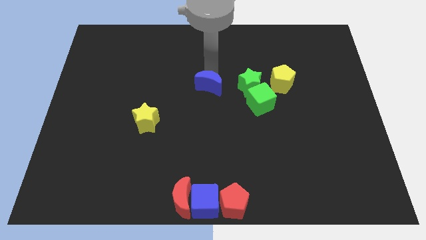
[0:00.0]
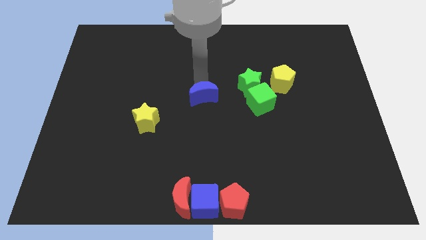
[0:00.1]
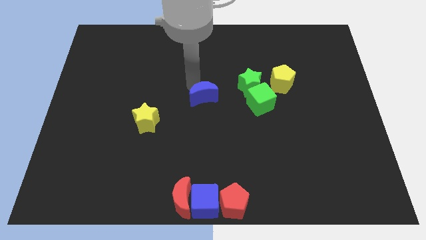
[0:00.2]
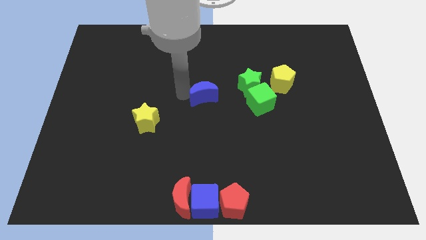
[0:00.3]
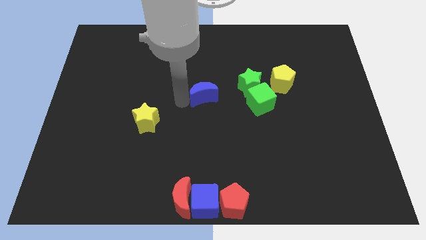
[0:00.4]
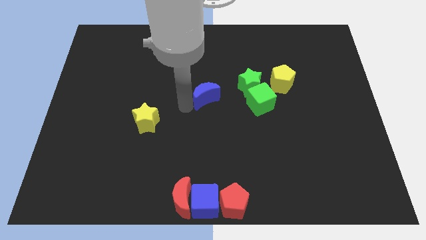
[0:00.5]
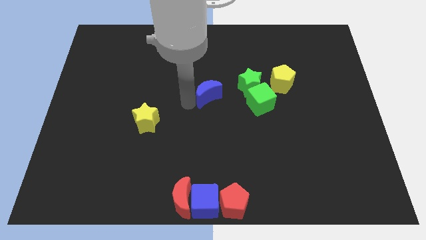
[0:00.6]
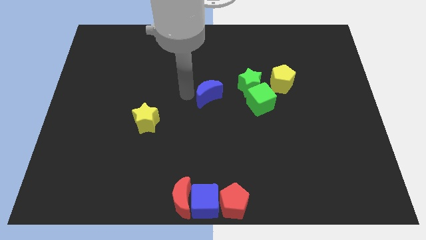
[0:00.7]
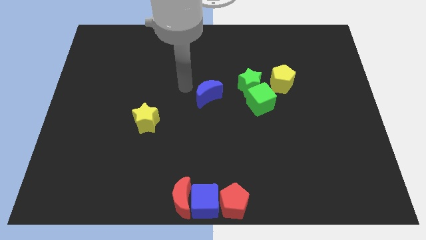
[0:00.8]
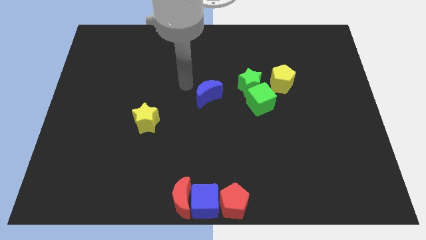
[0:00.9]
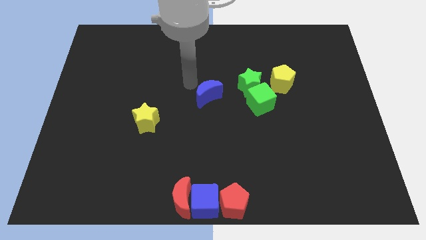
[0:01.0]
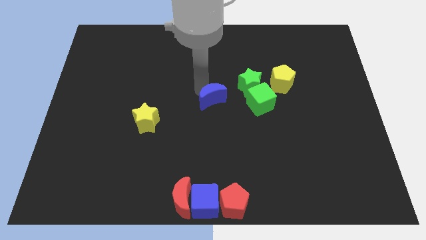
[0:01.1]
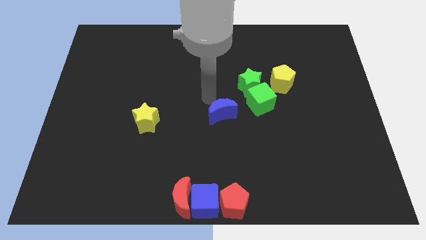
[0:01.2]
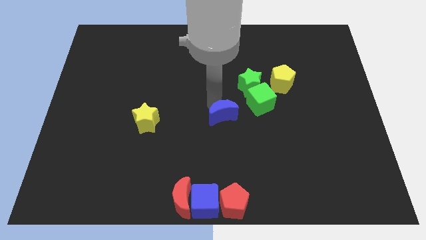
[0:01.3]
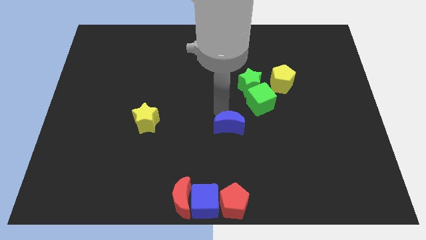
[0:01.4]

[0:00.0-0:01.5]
push the blue crescent to the right of the yellow star

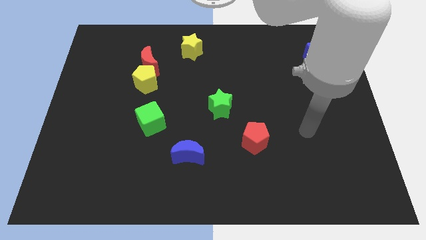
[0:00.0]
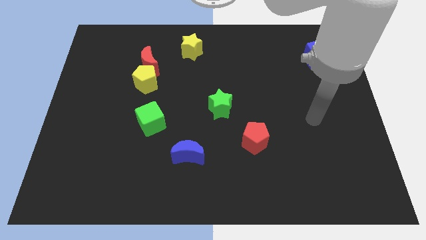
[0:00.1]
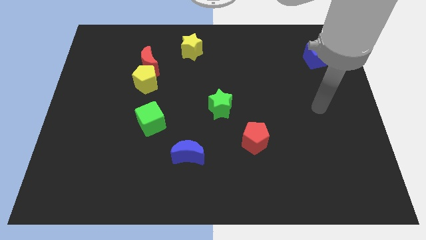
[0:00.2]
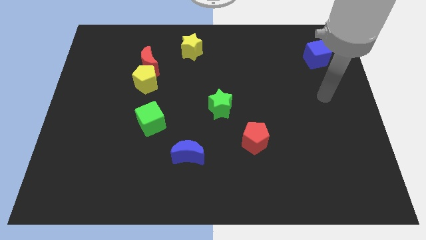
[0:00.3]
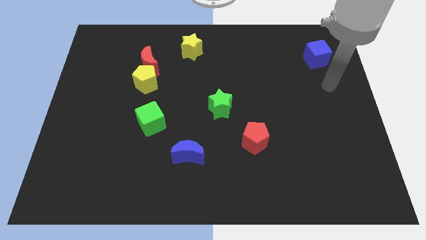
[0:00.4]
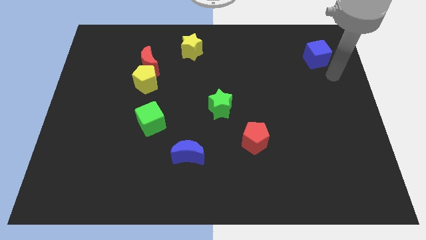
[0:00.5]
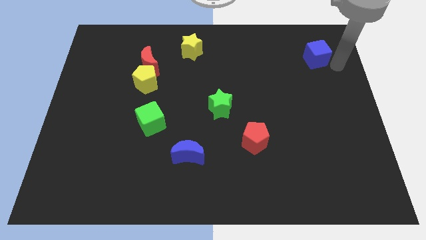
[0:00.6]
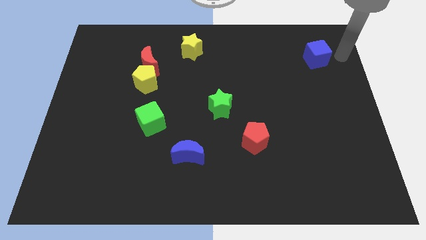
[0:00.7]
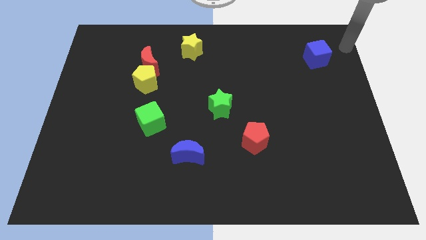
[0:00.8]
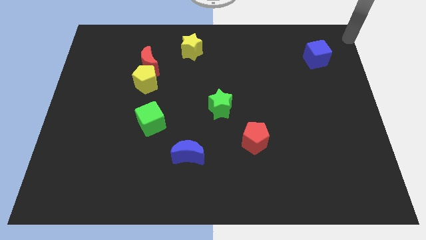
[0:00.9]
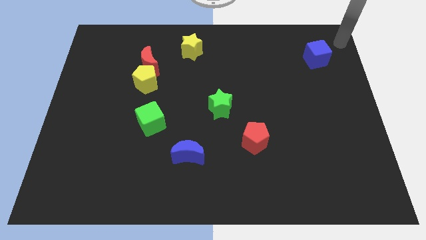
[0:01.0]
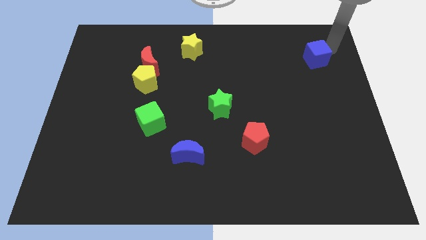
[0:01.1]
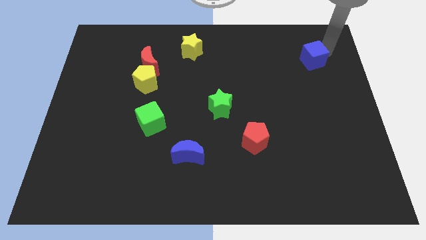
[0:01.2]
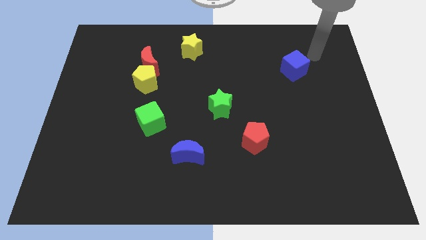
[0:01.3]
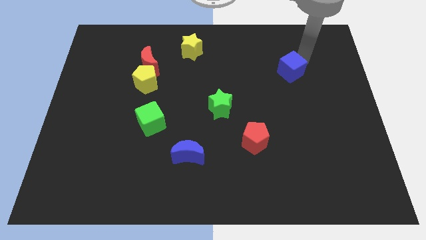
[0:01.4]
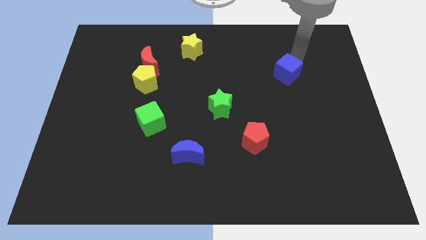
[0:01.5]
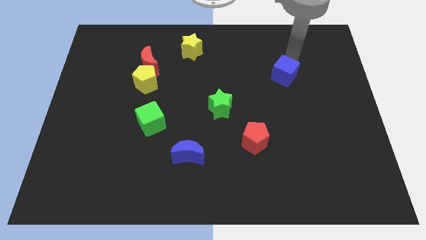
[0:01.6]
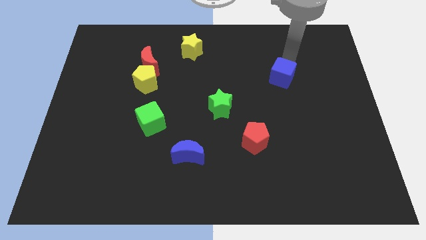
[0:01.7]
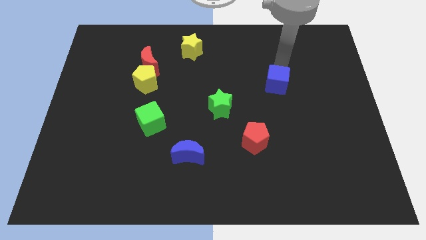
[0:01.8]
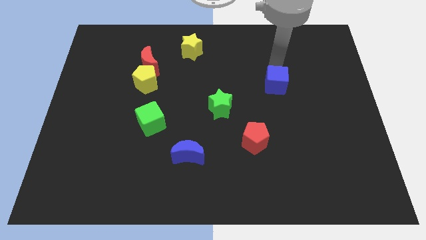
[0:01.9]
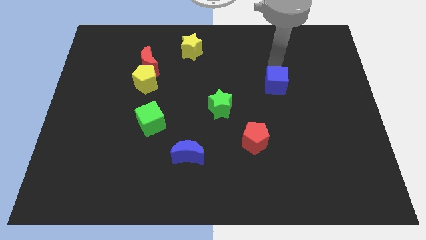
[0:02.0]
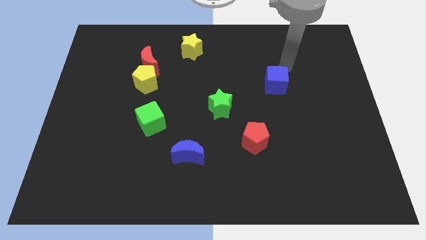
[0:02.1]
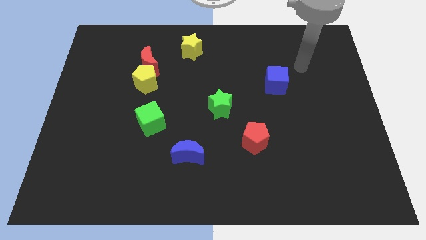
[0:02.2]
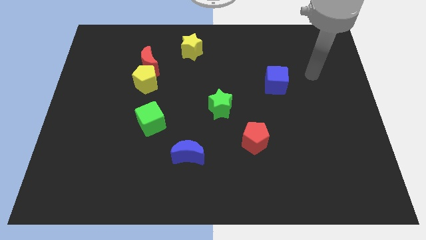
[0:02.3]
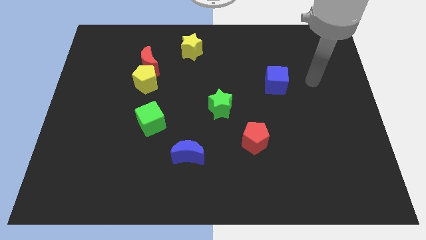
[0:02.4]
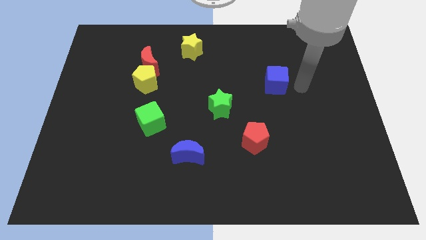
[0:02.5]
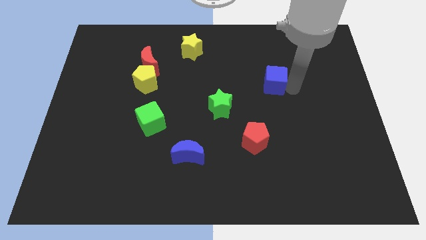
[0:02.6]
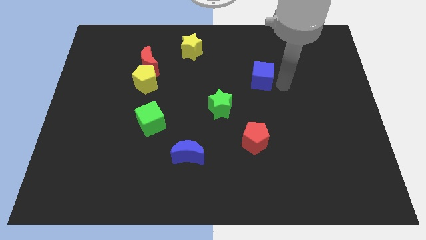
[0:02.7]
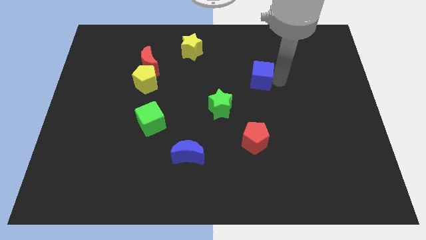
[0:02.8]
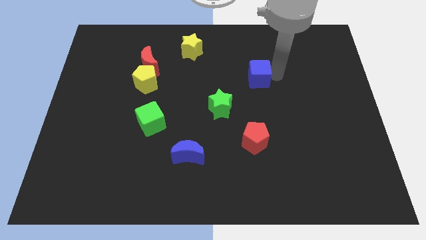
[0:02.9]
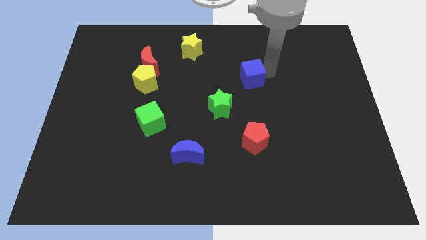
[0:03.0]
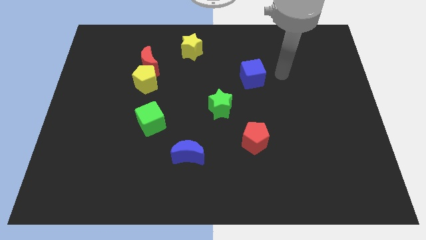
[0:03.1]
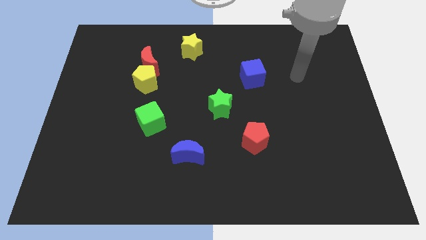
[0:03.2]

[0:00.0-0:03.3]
slide the blue cube to the top right of the green star

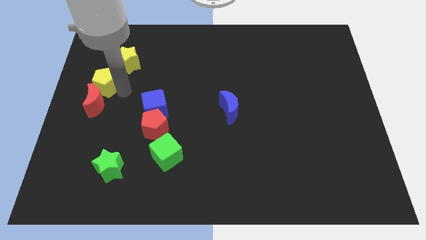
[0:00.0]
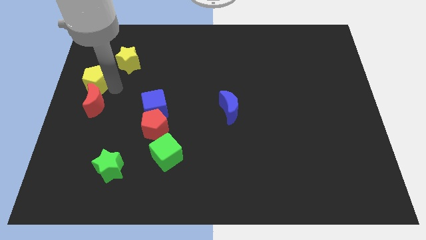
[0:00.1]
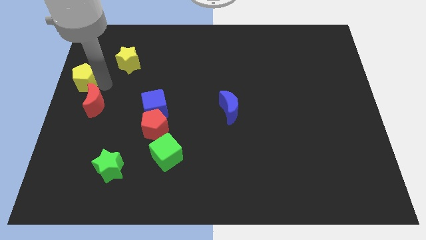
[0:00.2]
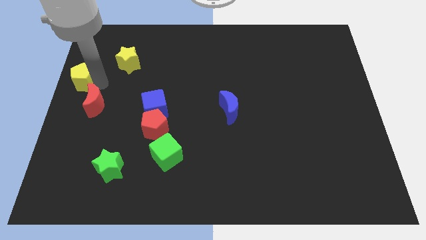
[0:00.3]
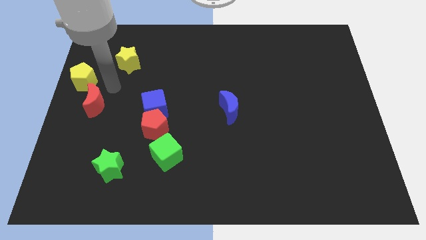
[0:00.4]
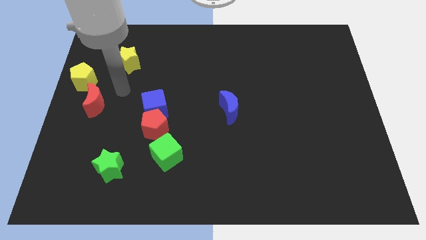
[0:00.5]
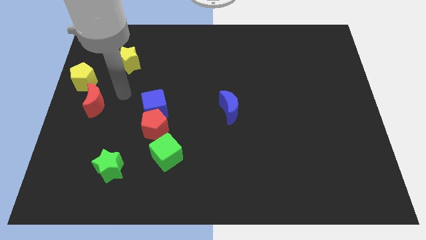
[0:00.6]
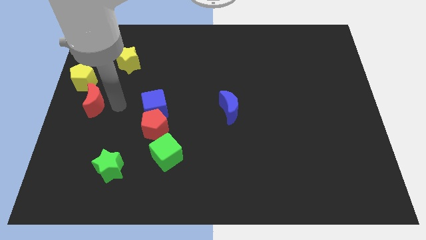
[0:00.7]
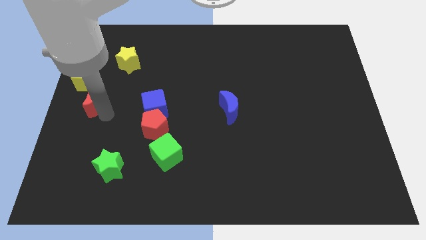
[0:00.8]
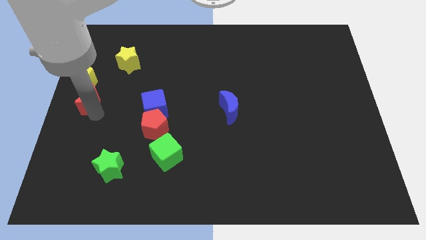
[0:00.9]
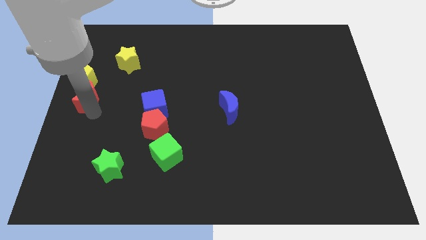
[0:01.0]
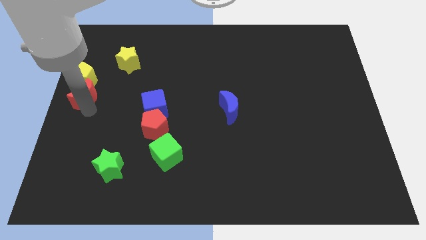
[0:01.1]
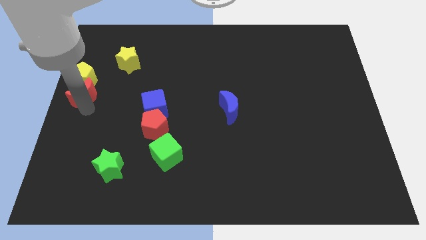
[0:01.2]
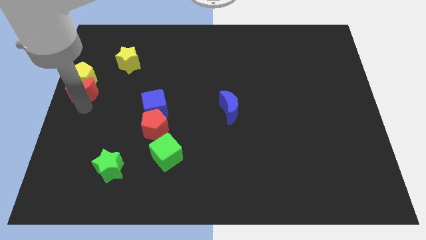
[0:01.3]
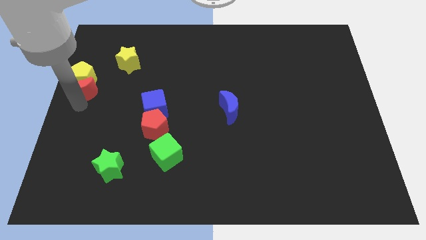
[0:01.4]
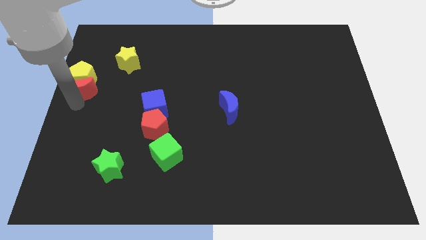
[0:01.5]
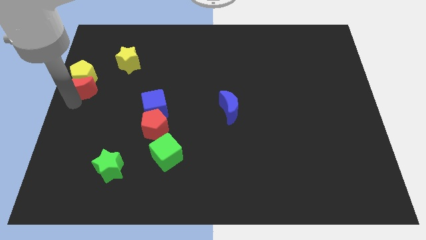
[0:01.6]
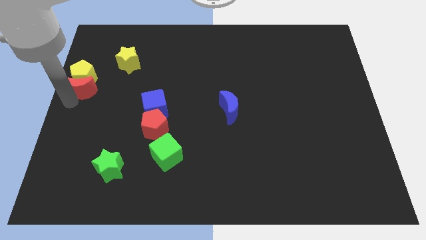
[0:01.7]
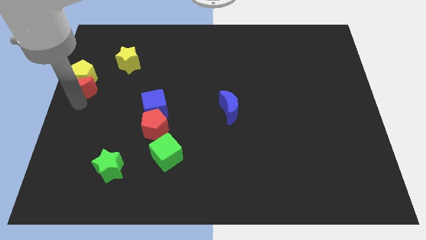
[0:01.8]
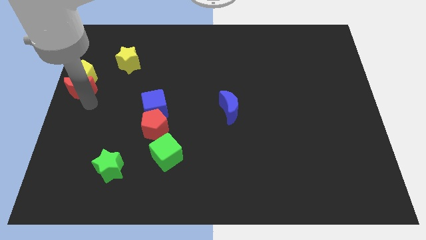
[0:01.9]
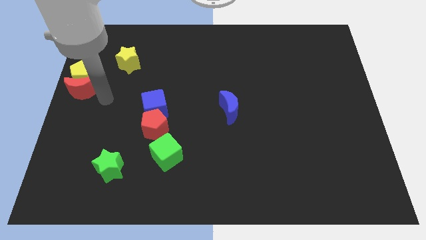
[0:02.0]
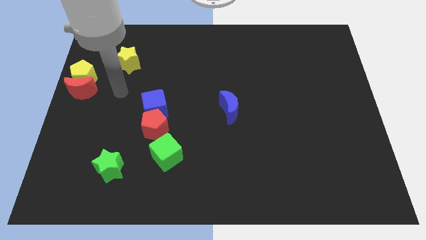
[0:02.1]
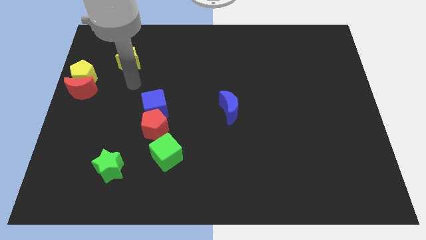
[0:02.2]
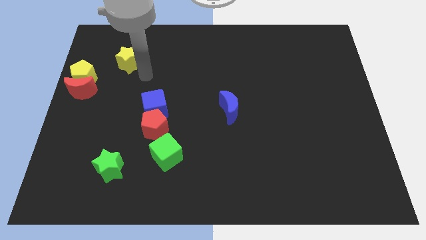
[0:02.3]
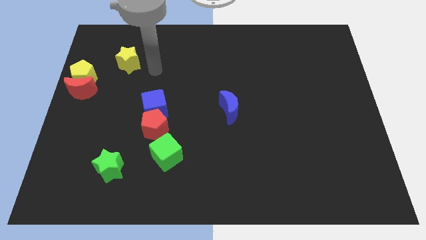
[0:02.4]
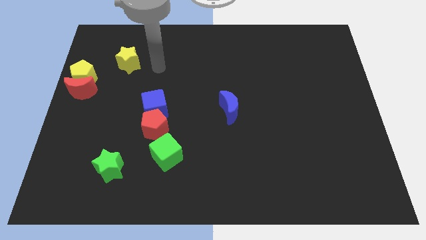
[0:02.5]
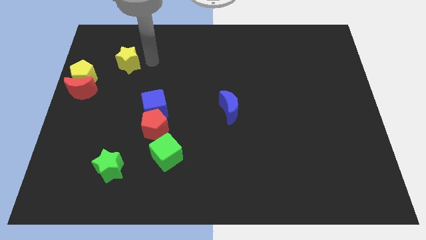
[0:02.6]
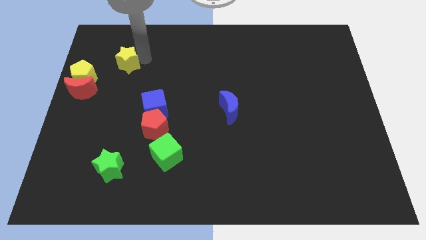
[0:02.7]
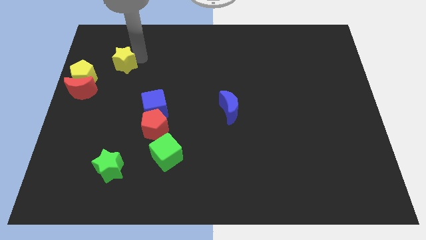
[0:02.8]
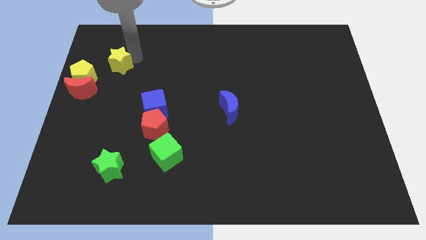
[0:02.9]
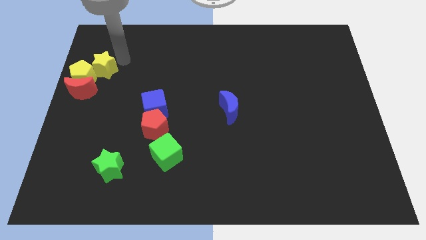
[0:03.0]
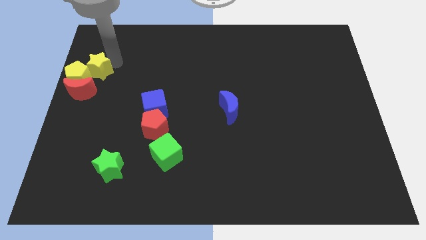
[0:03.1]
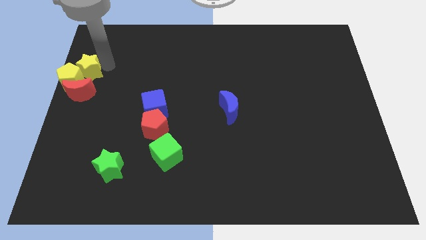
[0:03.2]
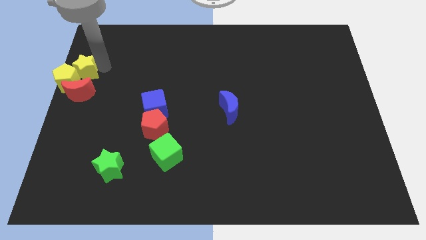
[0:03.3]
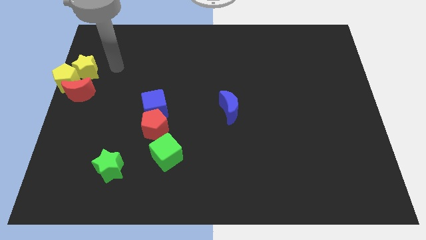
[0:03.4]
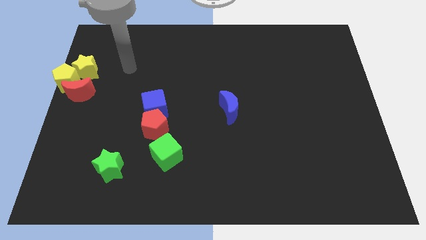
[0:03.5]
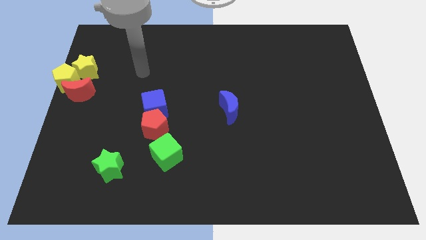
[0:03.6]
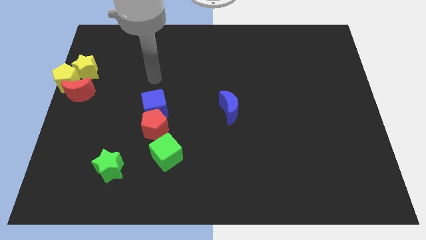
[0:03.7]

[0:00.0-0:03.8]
put both the yellow blocks and red moon diagonally on the top left side of the green star

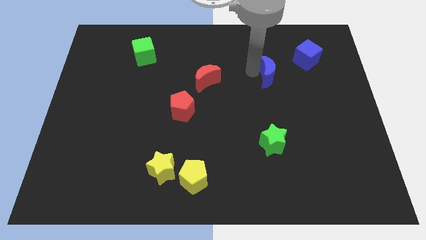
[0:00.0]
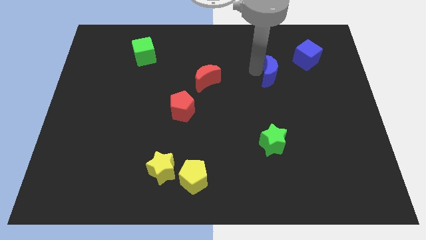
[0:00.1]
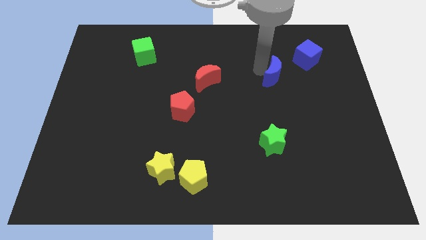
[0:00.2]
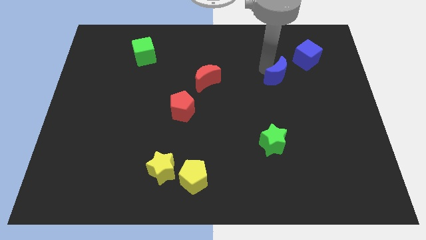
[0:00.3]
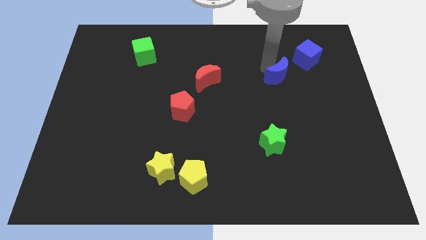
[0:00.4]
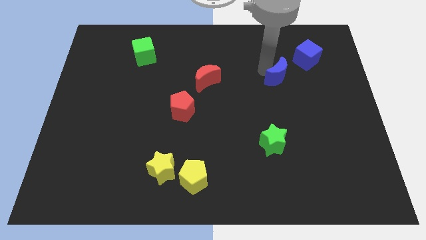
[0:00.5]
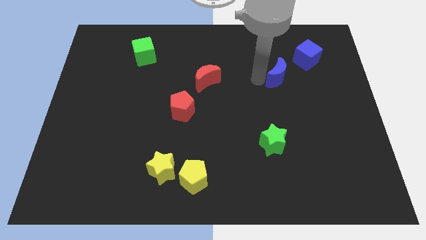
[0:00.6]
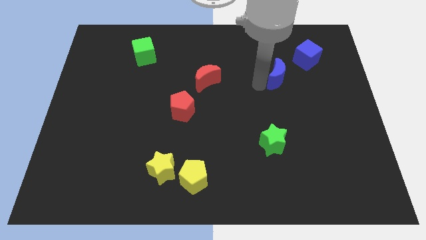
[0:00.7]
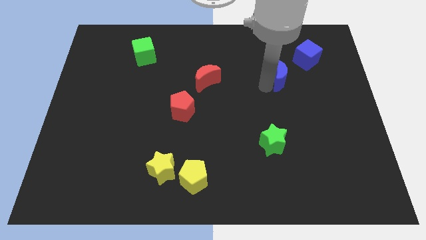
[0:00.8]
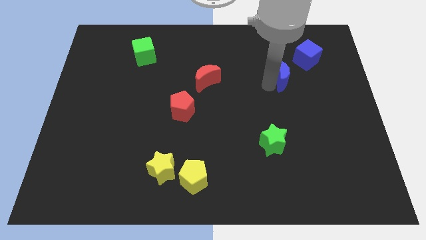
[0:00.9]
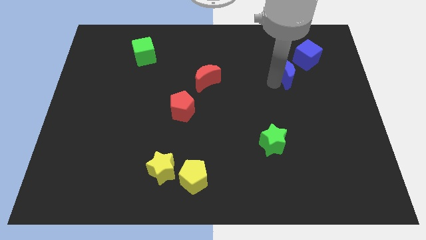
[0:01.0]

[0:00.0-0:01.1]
move the blue crescent close to the blue cube
